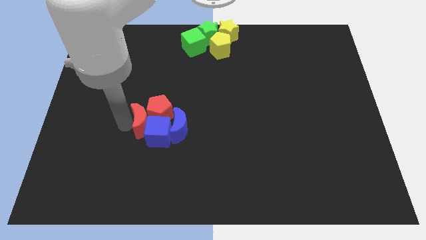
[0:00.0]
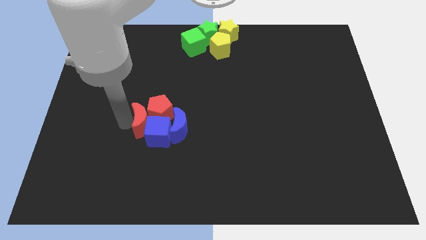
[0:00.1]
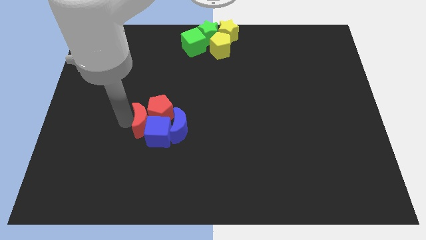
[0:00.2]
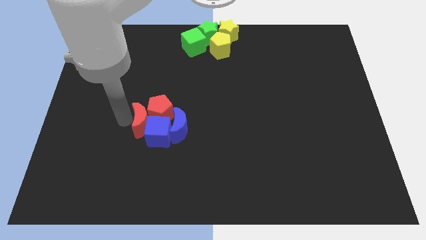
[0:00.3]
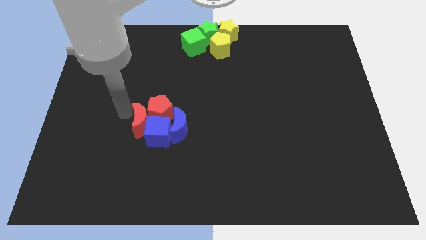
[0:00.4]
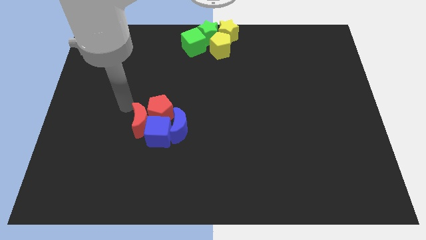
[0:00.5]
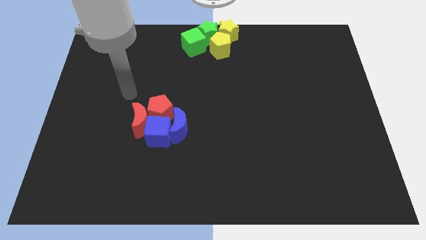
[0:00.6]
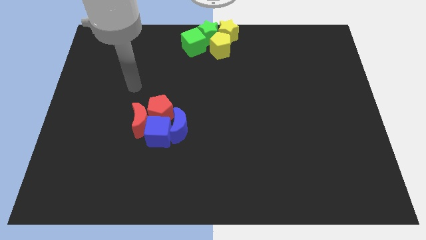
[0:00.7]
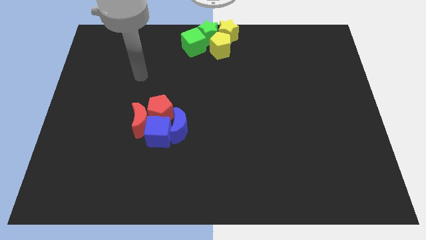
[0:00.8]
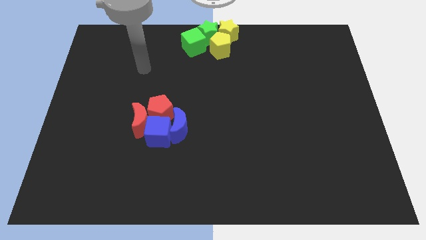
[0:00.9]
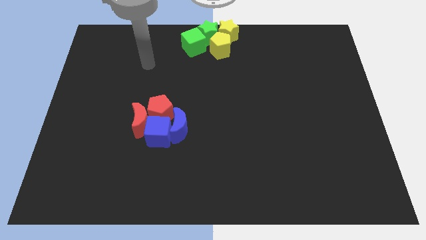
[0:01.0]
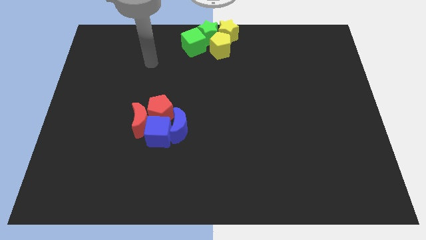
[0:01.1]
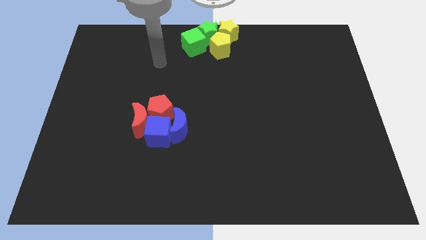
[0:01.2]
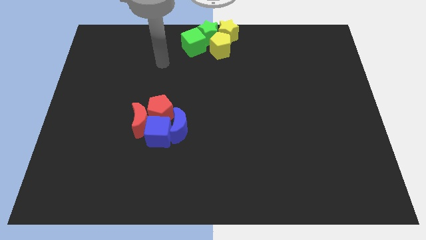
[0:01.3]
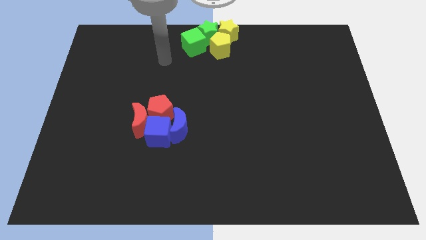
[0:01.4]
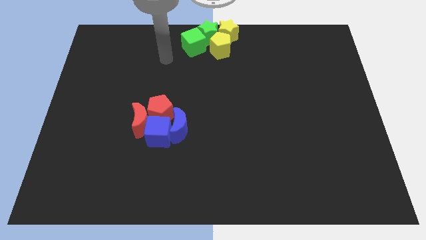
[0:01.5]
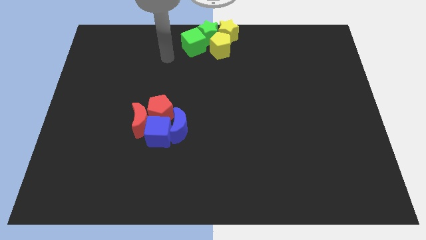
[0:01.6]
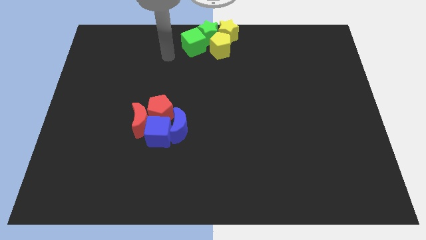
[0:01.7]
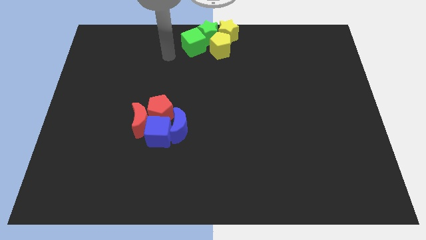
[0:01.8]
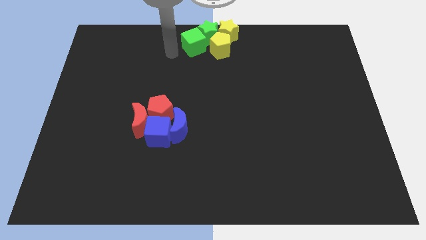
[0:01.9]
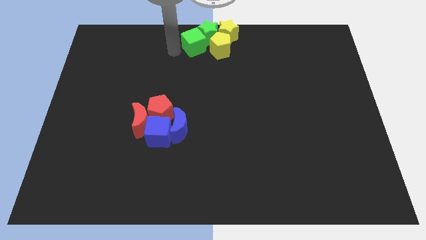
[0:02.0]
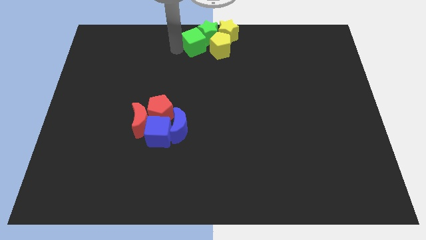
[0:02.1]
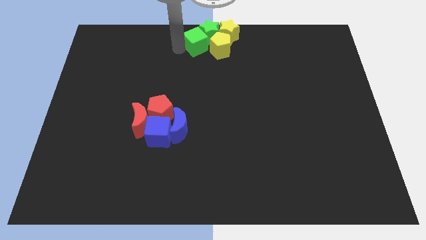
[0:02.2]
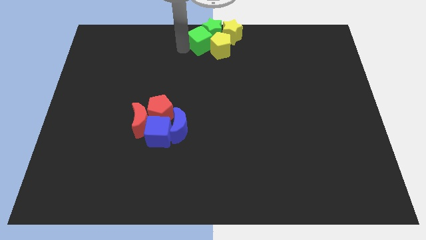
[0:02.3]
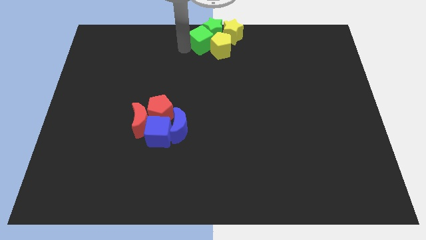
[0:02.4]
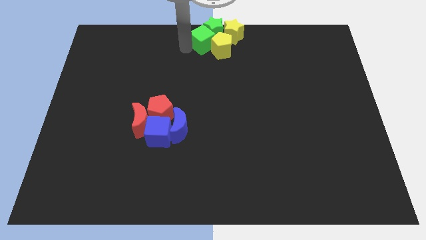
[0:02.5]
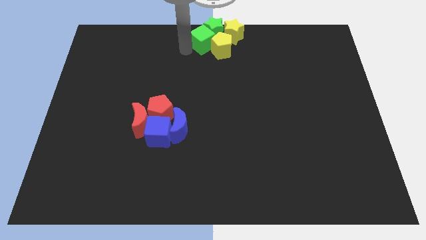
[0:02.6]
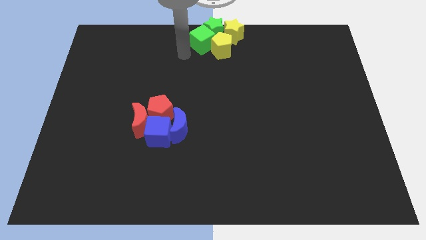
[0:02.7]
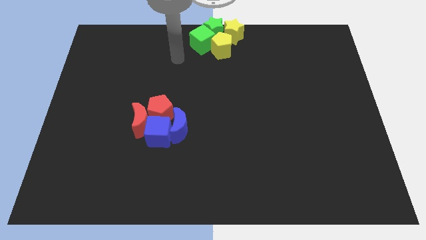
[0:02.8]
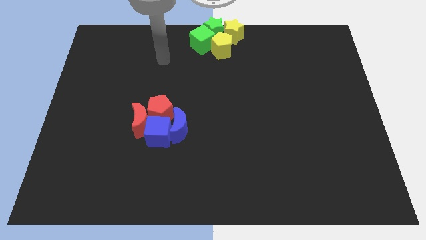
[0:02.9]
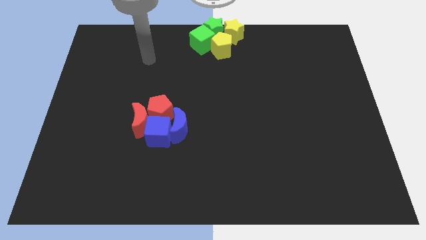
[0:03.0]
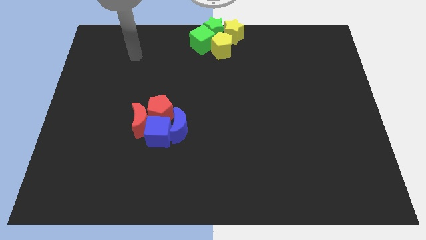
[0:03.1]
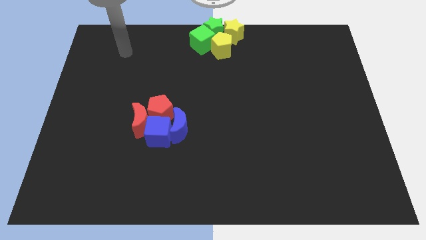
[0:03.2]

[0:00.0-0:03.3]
push the green cube into the group of green and yellow blocks

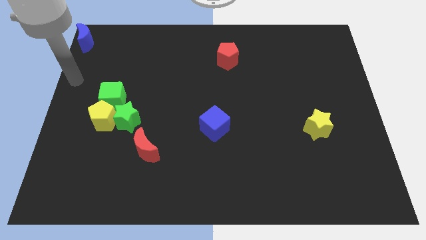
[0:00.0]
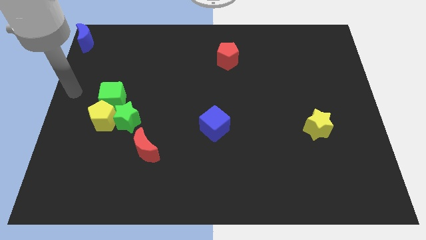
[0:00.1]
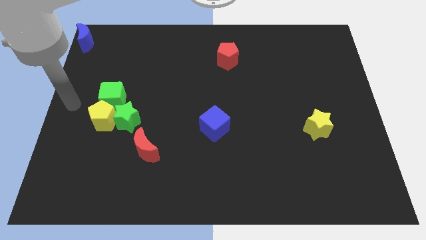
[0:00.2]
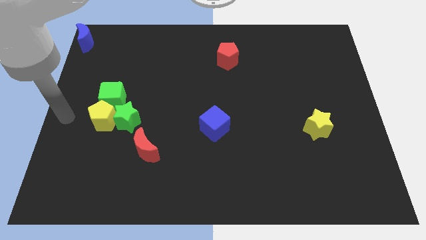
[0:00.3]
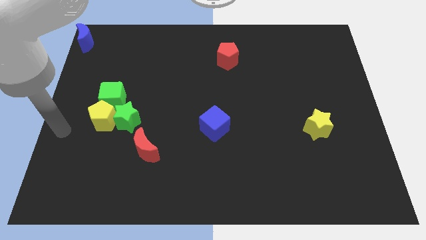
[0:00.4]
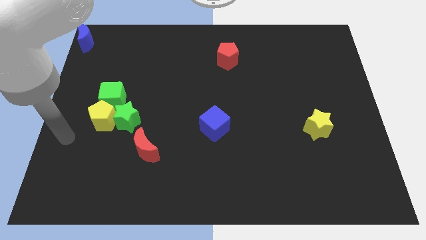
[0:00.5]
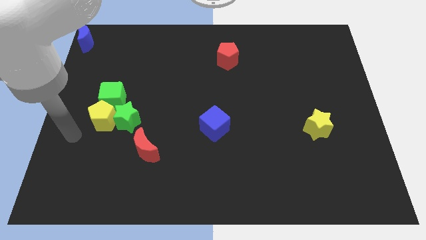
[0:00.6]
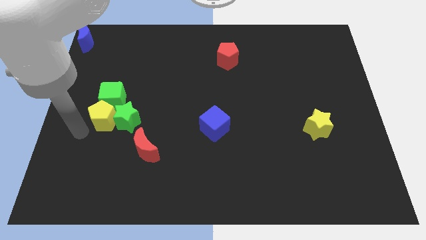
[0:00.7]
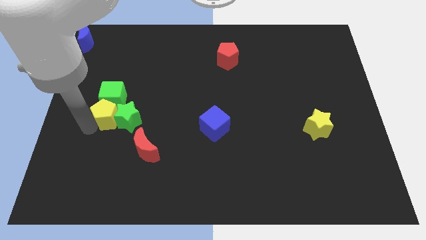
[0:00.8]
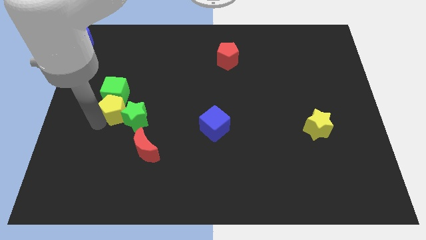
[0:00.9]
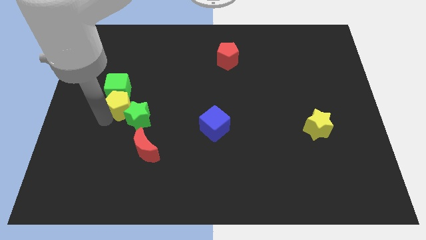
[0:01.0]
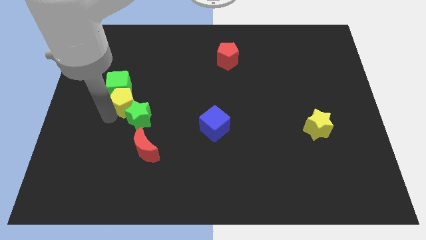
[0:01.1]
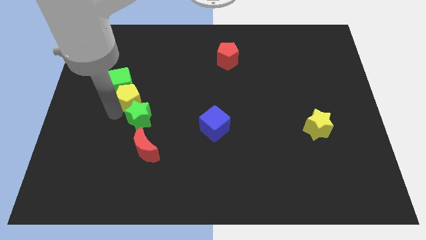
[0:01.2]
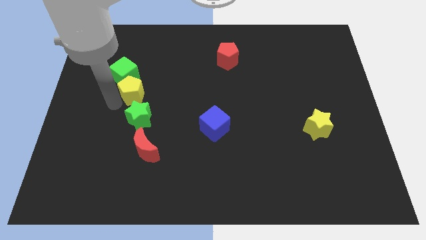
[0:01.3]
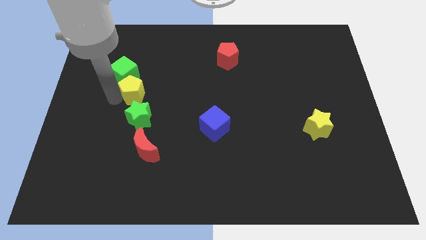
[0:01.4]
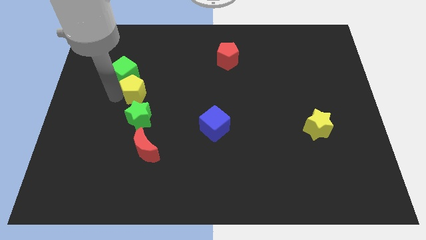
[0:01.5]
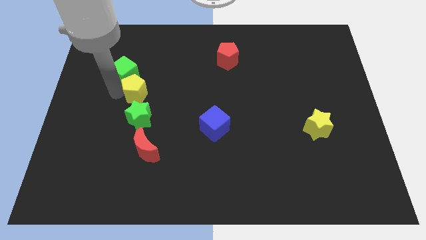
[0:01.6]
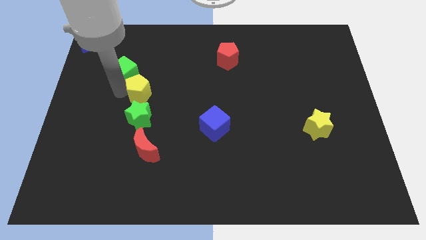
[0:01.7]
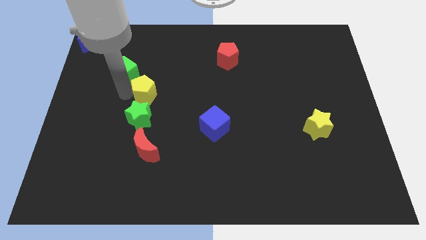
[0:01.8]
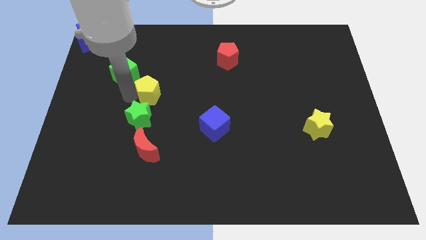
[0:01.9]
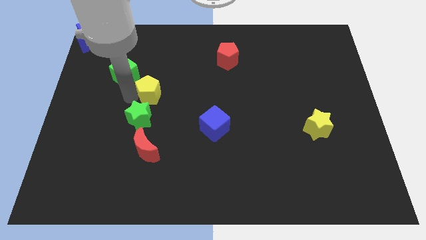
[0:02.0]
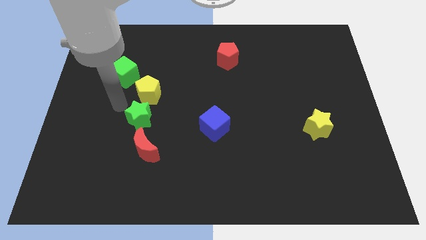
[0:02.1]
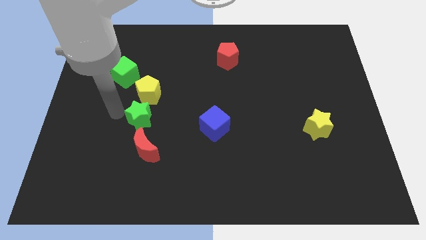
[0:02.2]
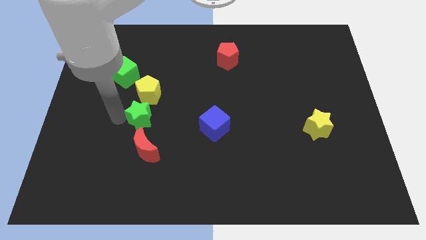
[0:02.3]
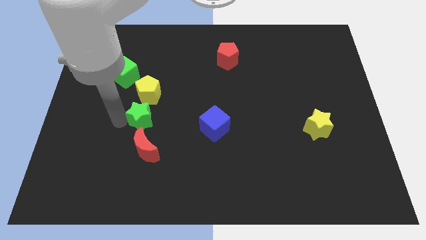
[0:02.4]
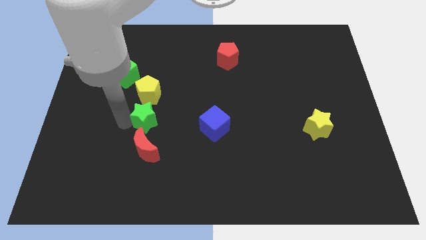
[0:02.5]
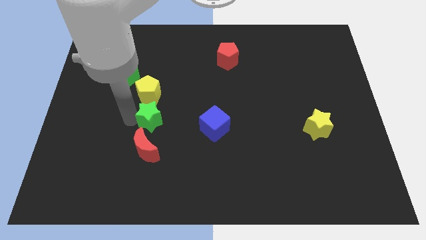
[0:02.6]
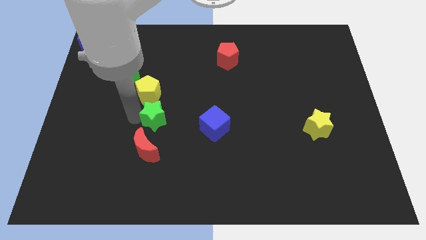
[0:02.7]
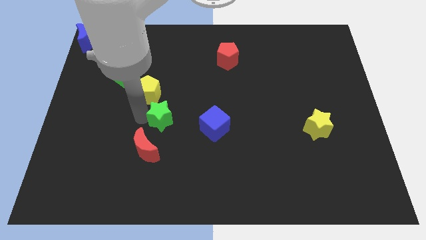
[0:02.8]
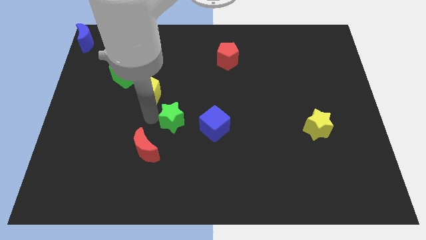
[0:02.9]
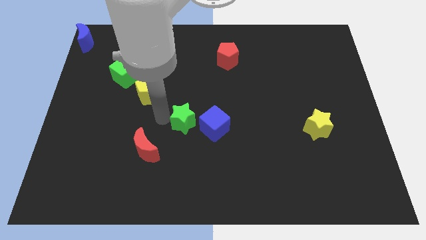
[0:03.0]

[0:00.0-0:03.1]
push the green star to the left of the blue cube

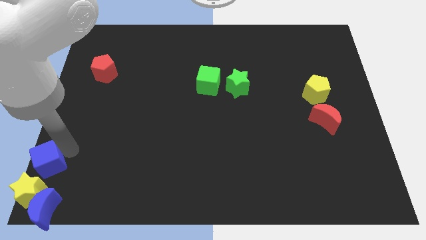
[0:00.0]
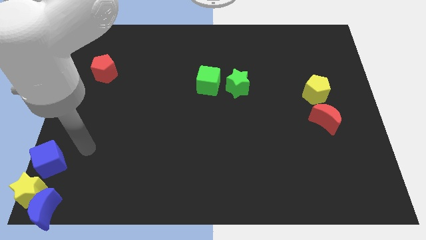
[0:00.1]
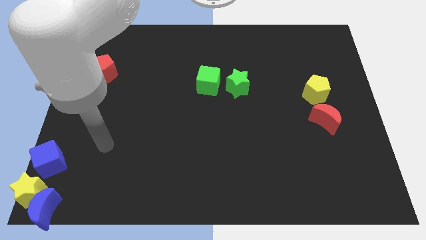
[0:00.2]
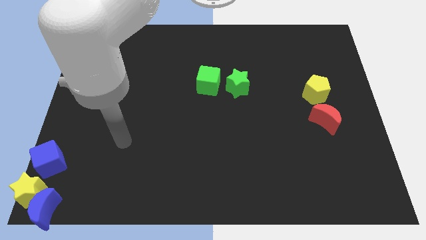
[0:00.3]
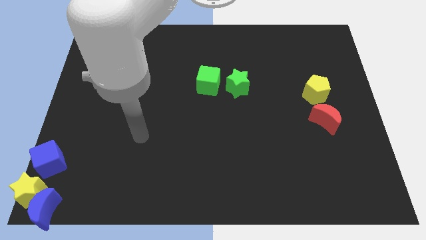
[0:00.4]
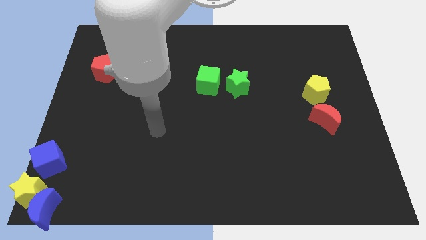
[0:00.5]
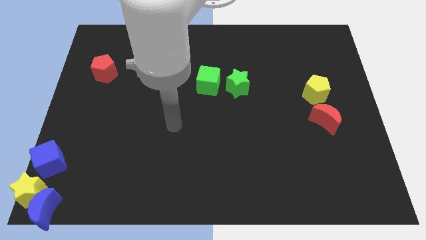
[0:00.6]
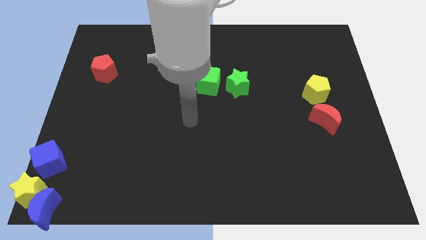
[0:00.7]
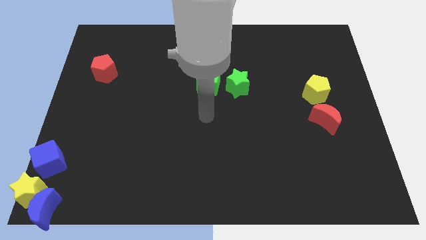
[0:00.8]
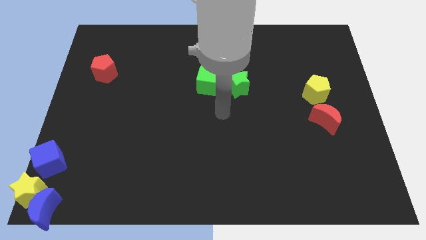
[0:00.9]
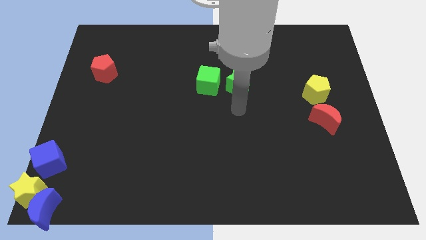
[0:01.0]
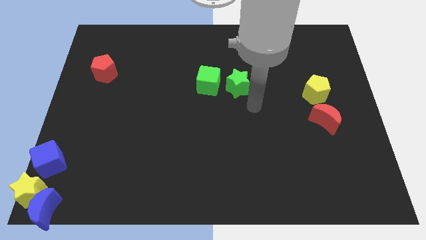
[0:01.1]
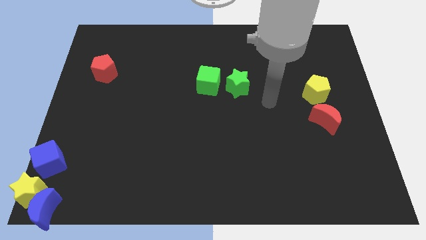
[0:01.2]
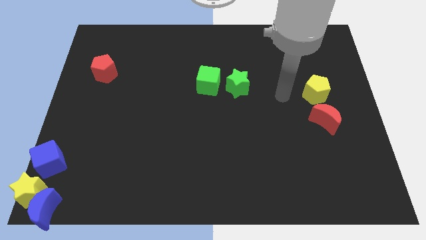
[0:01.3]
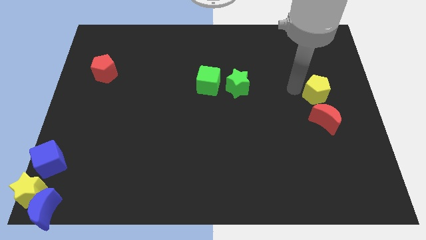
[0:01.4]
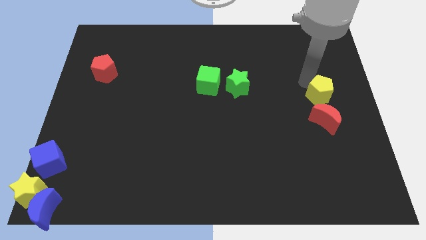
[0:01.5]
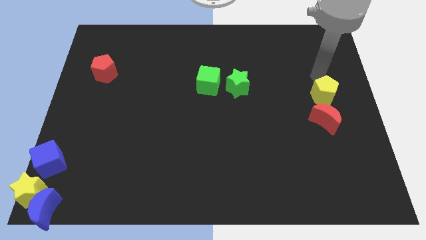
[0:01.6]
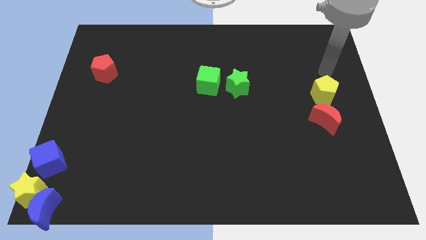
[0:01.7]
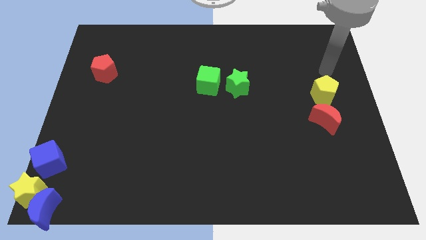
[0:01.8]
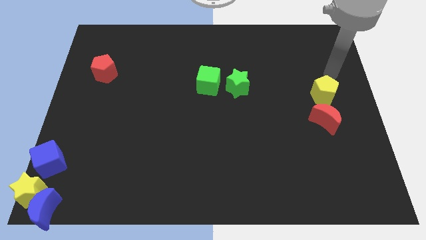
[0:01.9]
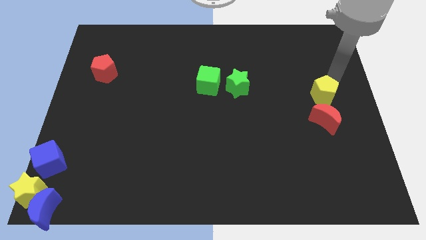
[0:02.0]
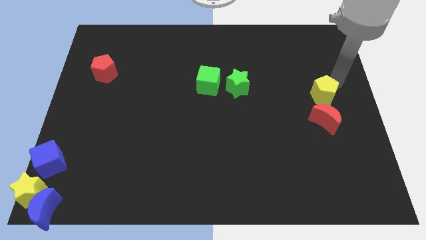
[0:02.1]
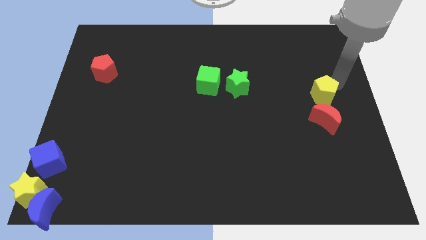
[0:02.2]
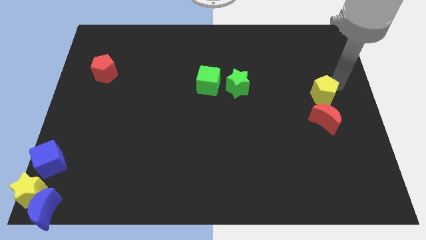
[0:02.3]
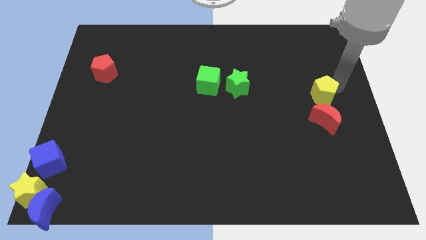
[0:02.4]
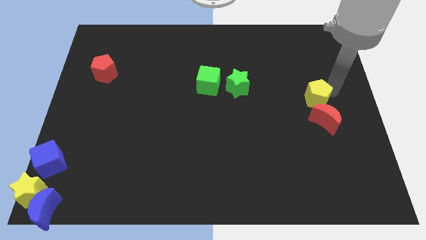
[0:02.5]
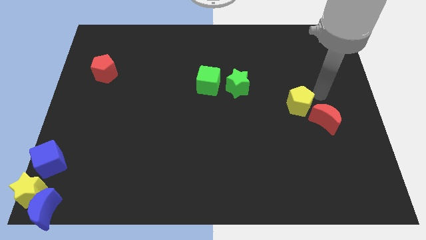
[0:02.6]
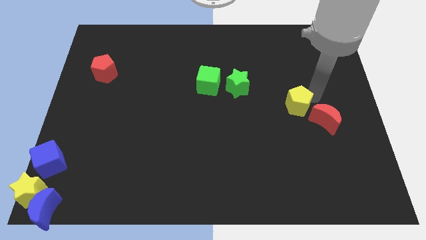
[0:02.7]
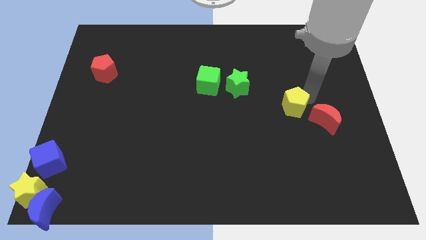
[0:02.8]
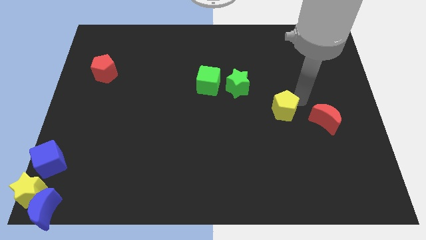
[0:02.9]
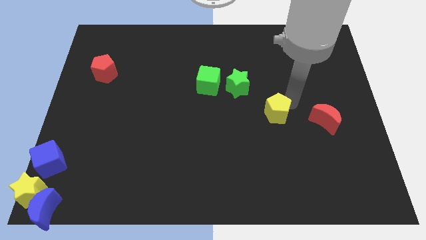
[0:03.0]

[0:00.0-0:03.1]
move the yellow pentagon to the left of the red crescent
